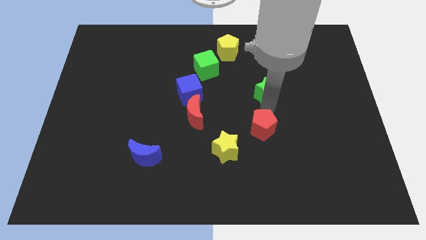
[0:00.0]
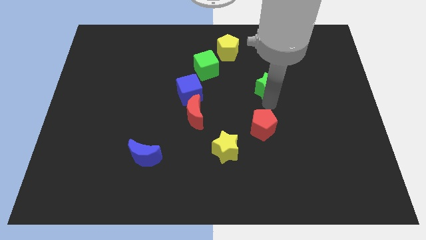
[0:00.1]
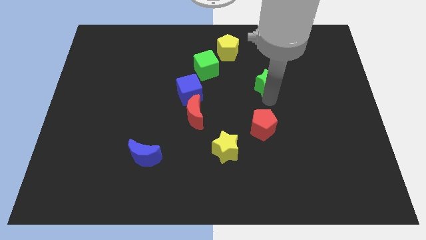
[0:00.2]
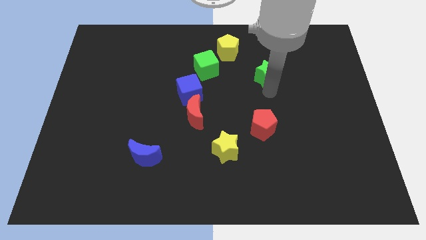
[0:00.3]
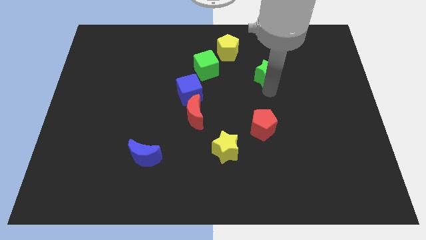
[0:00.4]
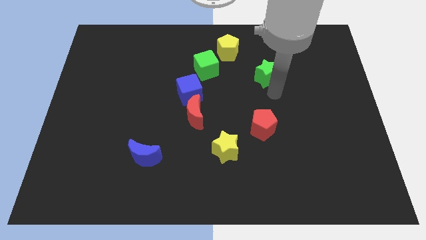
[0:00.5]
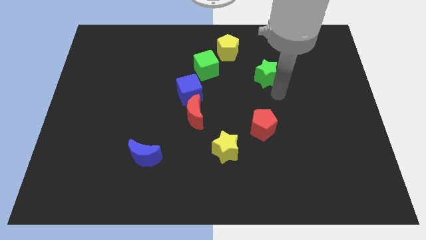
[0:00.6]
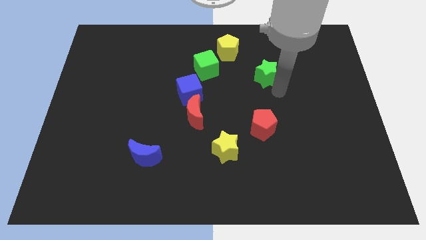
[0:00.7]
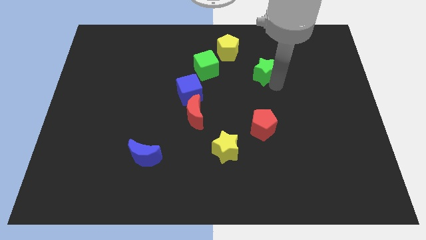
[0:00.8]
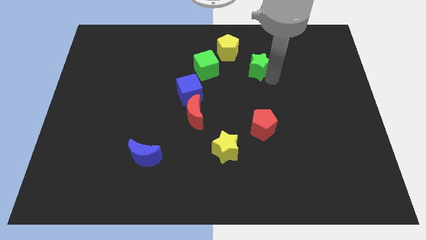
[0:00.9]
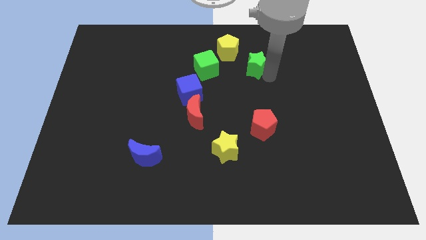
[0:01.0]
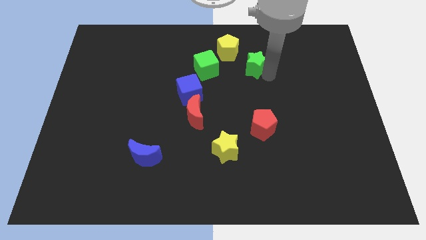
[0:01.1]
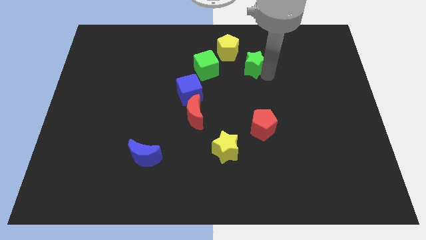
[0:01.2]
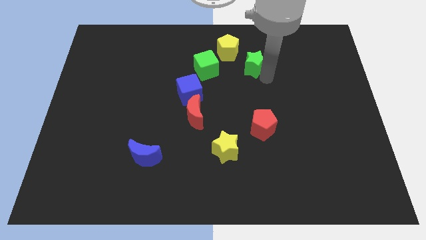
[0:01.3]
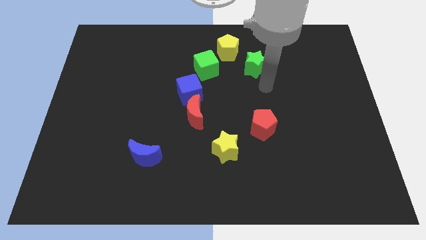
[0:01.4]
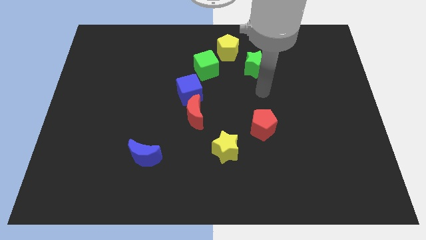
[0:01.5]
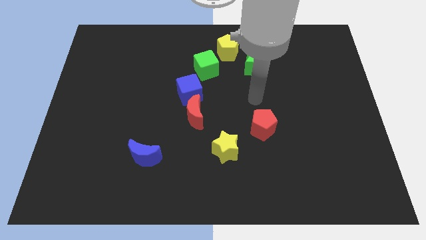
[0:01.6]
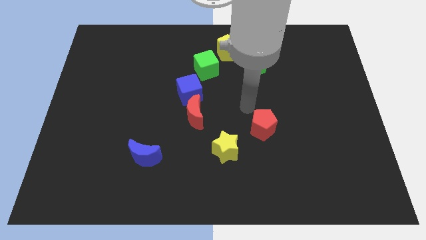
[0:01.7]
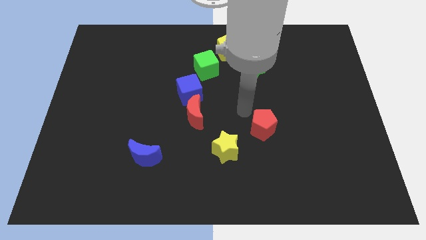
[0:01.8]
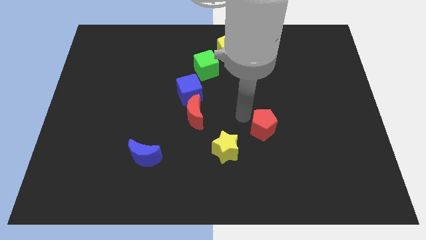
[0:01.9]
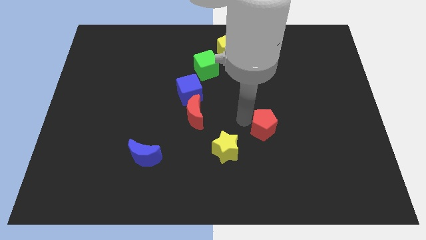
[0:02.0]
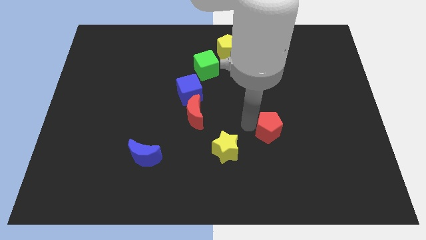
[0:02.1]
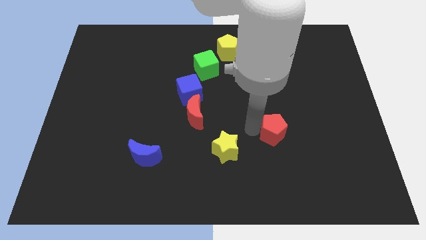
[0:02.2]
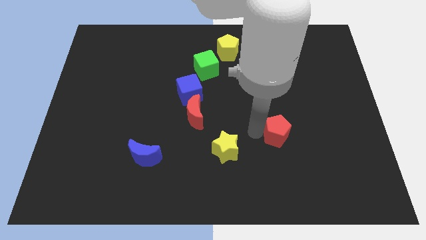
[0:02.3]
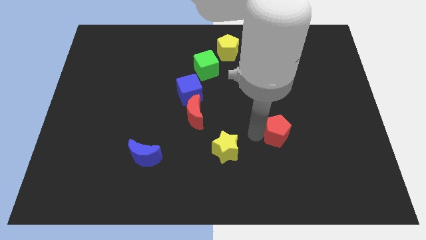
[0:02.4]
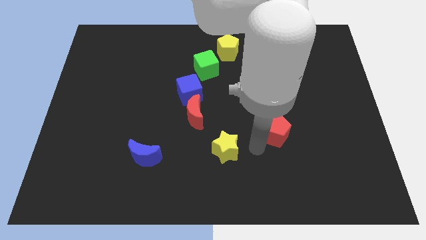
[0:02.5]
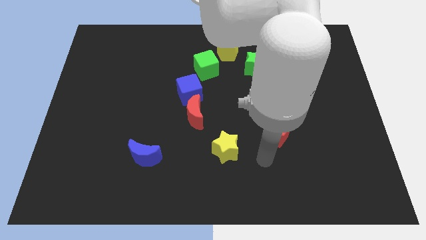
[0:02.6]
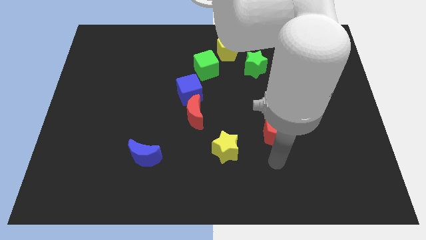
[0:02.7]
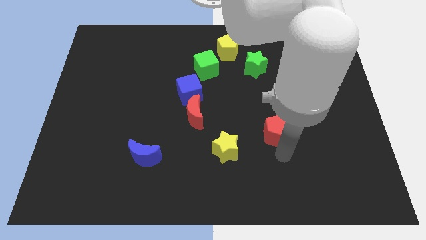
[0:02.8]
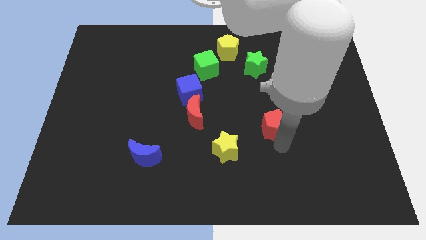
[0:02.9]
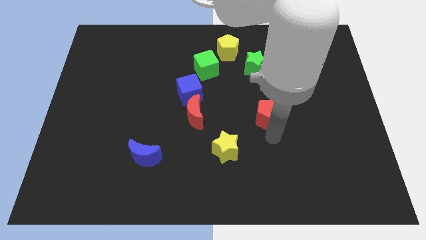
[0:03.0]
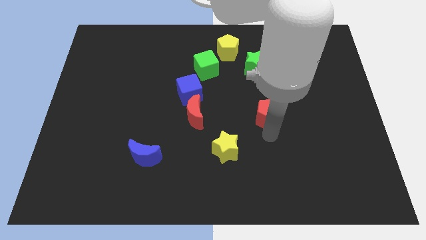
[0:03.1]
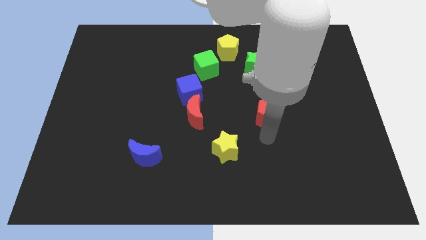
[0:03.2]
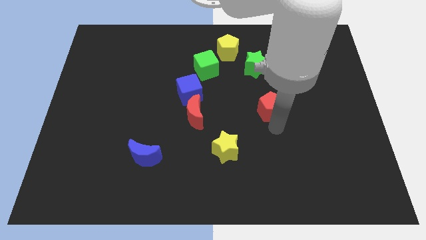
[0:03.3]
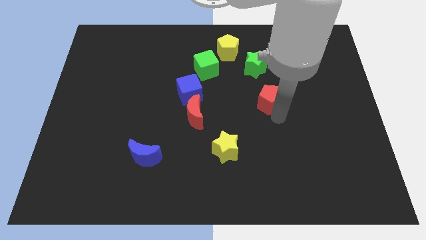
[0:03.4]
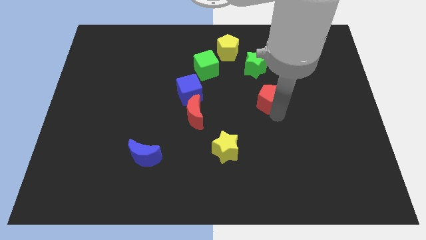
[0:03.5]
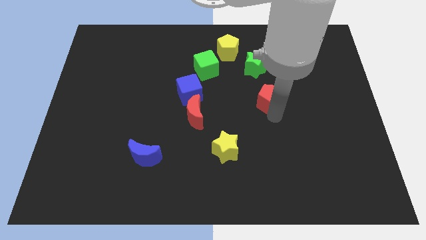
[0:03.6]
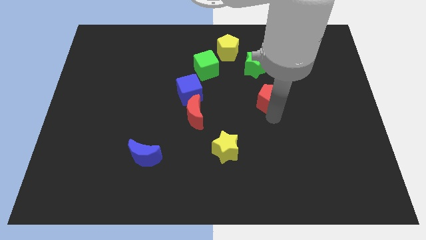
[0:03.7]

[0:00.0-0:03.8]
move the green star and red pentagon diagonal to each other

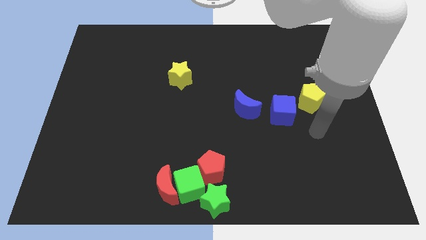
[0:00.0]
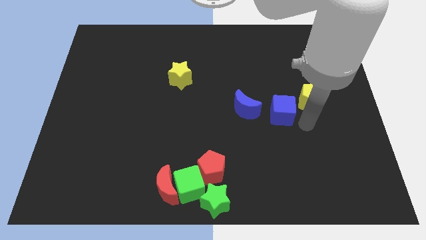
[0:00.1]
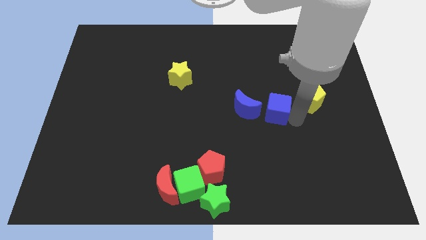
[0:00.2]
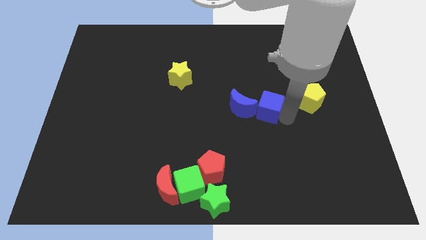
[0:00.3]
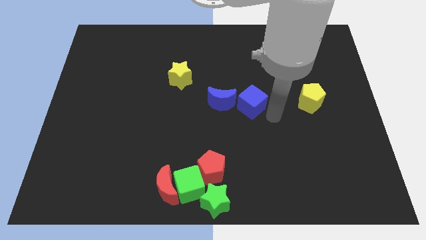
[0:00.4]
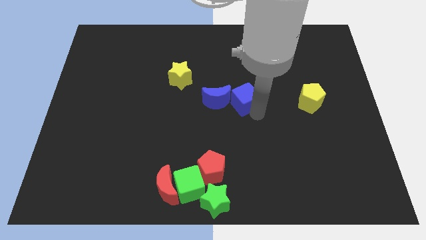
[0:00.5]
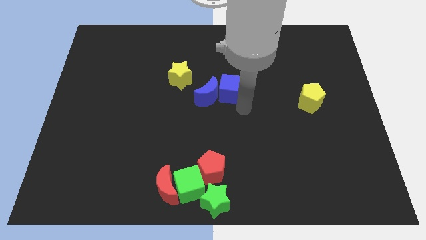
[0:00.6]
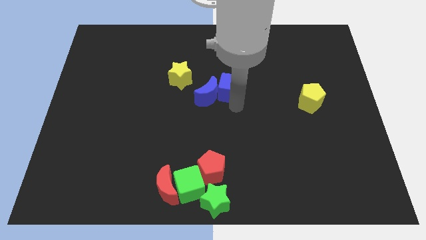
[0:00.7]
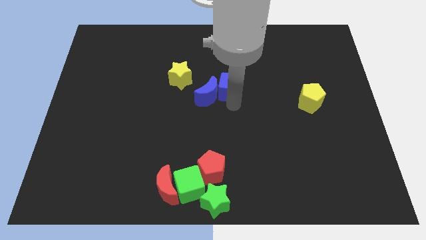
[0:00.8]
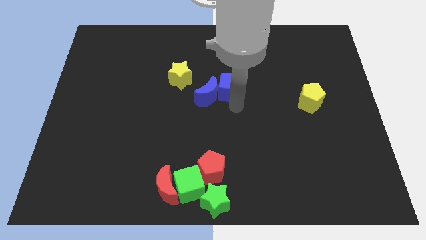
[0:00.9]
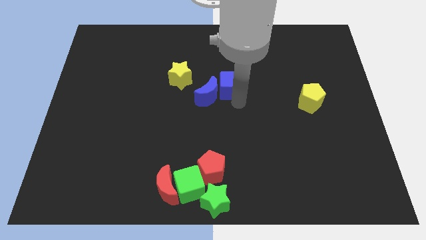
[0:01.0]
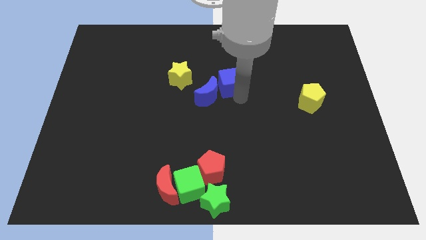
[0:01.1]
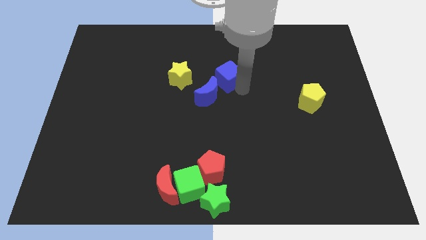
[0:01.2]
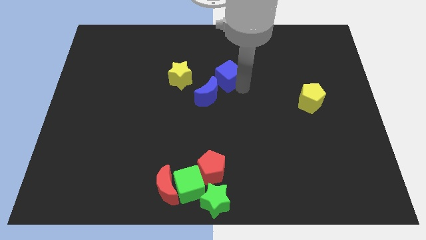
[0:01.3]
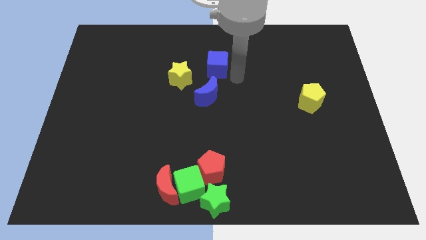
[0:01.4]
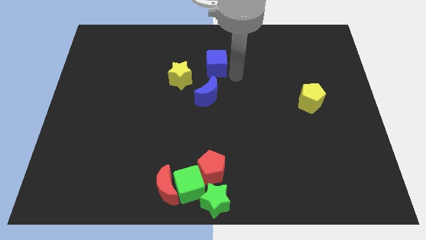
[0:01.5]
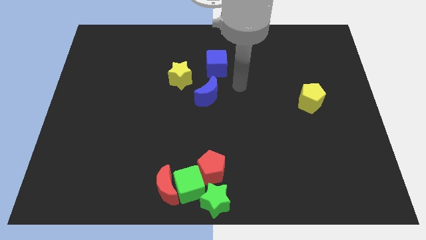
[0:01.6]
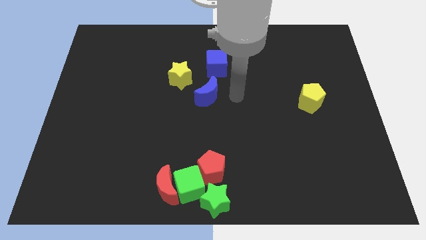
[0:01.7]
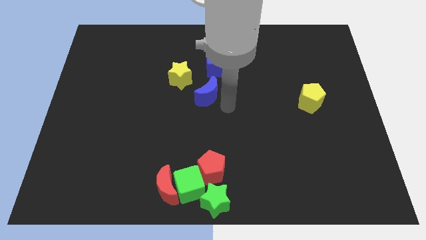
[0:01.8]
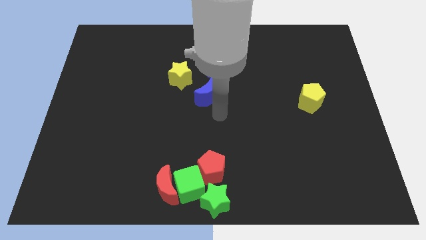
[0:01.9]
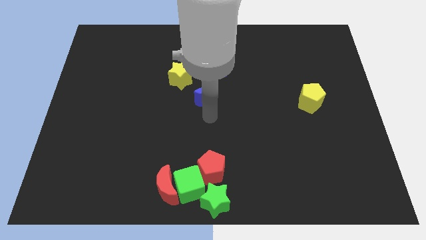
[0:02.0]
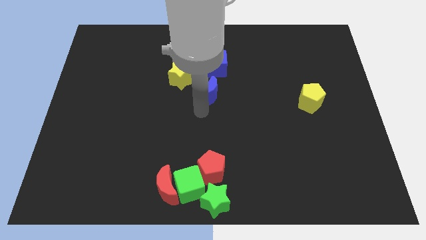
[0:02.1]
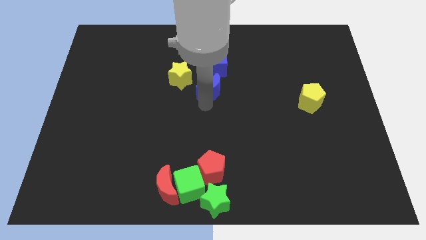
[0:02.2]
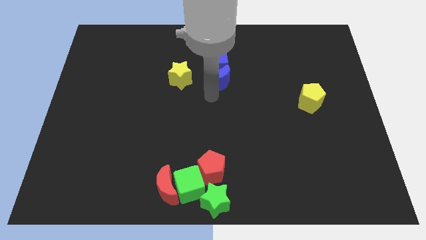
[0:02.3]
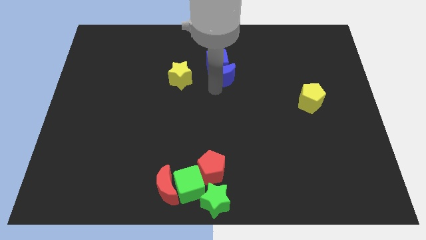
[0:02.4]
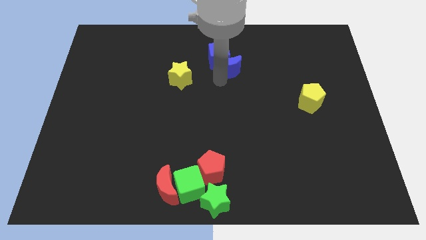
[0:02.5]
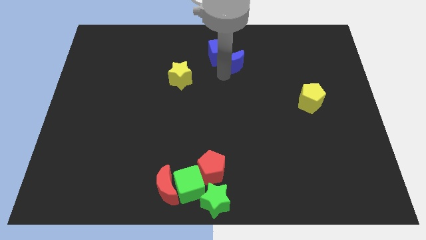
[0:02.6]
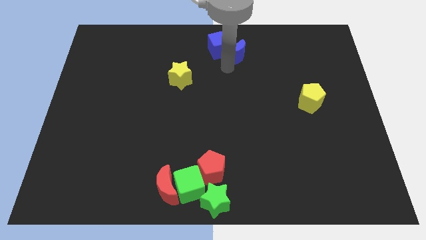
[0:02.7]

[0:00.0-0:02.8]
place the group of blue blocks at the top right of the yellow star

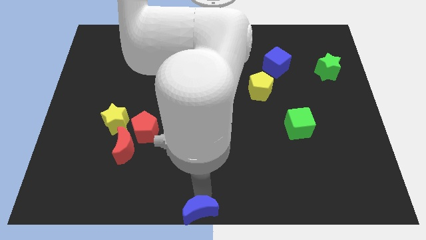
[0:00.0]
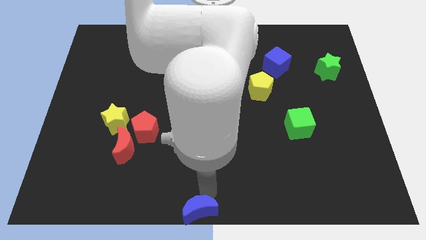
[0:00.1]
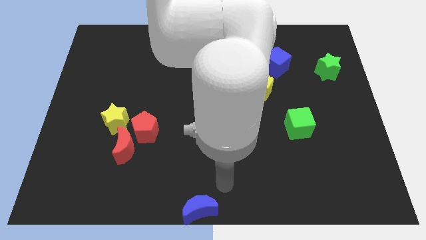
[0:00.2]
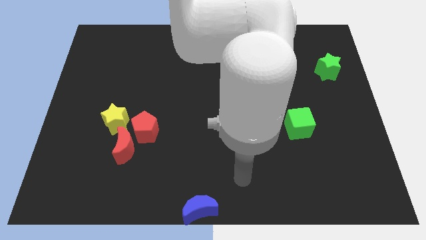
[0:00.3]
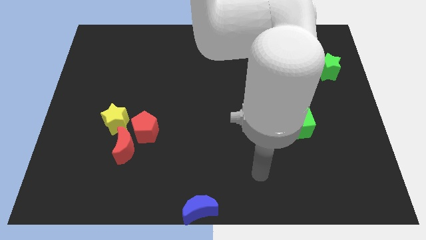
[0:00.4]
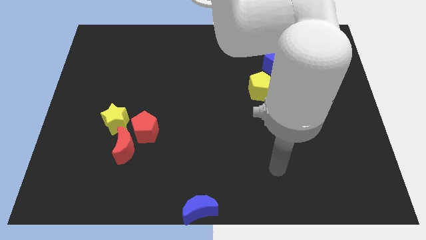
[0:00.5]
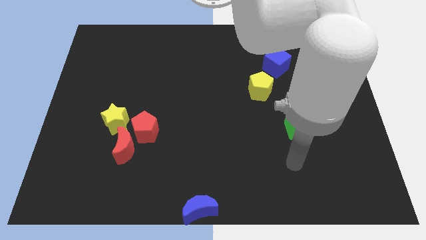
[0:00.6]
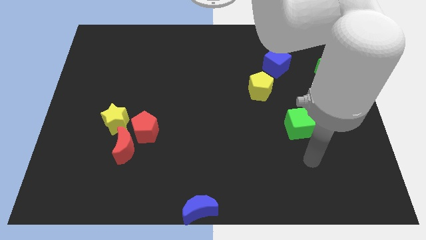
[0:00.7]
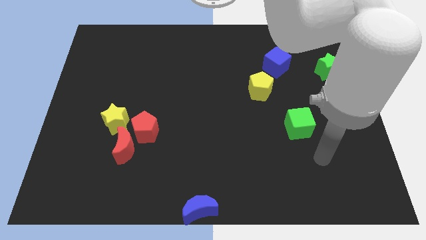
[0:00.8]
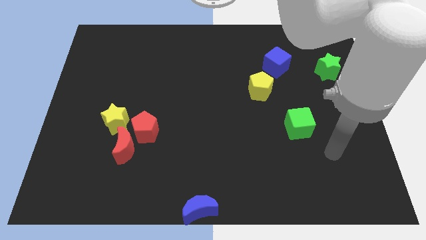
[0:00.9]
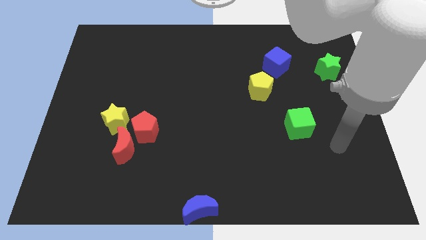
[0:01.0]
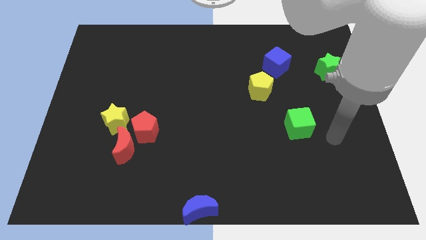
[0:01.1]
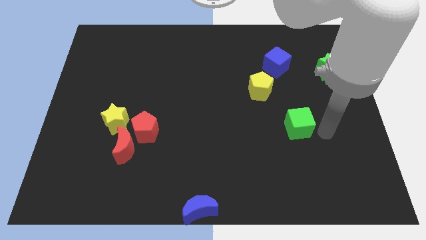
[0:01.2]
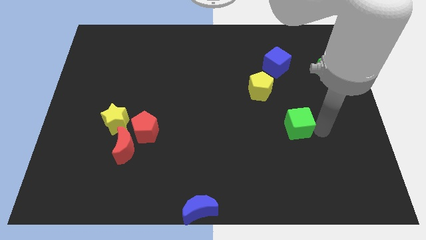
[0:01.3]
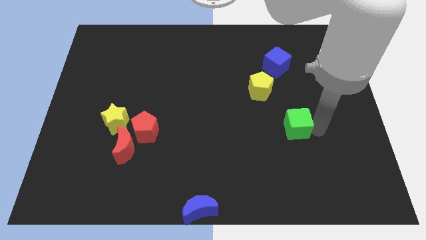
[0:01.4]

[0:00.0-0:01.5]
move your arm away from the blue moon

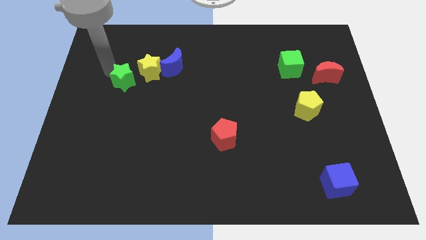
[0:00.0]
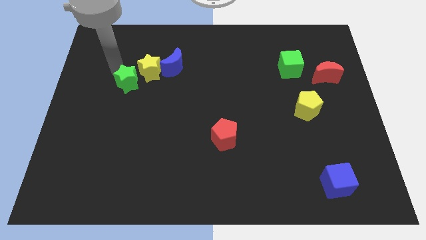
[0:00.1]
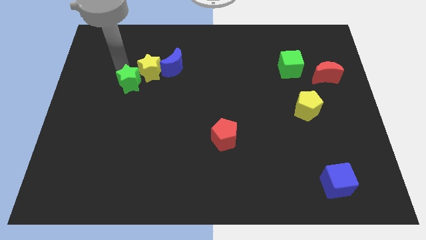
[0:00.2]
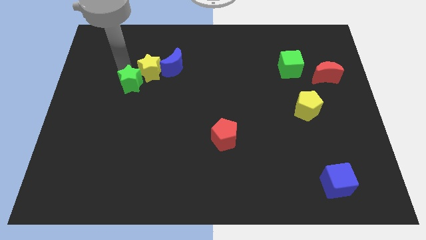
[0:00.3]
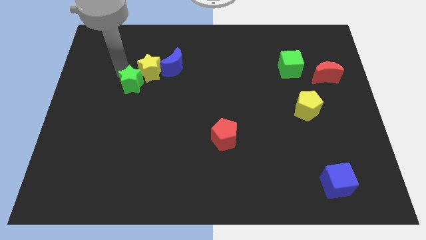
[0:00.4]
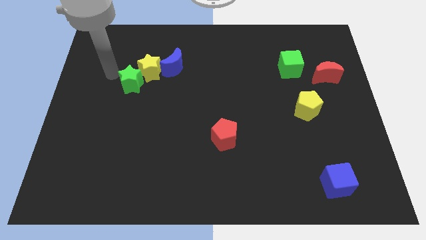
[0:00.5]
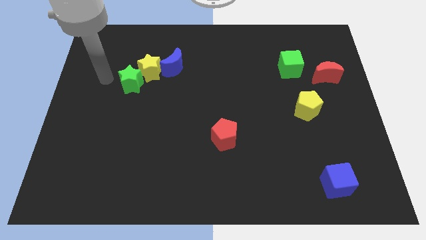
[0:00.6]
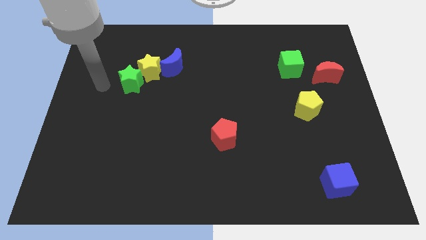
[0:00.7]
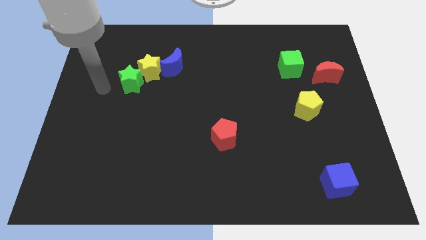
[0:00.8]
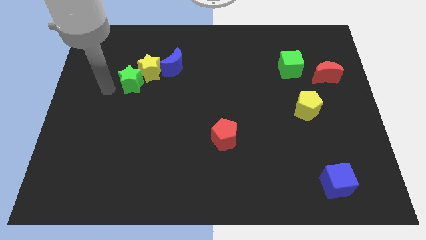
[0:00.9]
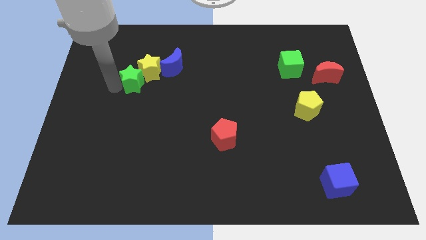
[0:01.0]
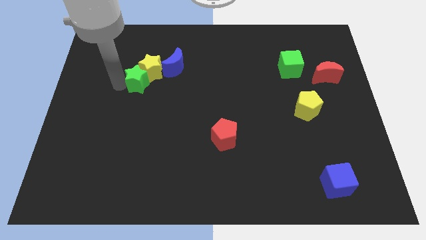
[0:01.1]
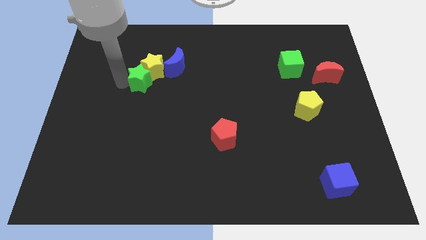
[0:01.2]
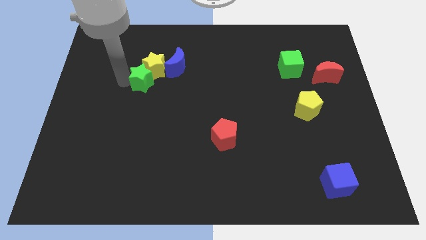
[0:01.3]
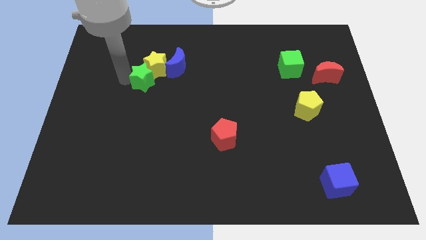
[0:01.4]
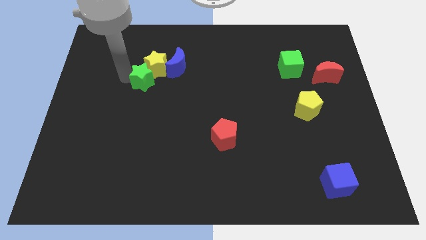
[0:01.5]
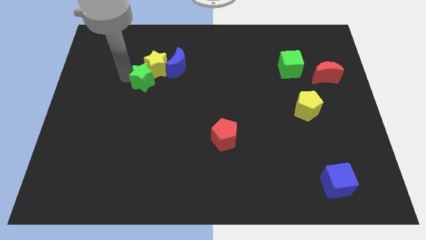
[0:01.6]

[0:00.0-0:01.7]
push the green star into the yellow star
